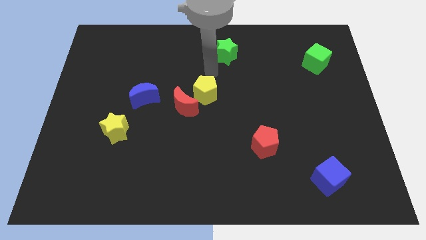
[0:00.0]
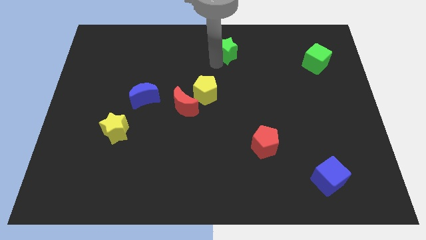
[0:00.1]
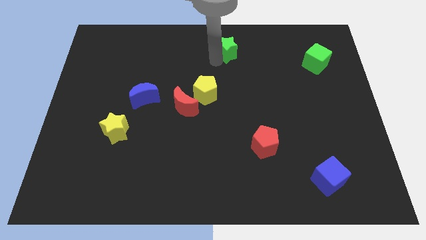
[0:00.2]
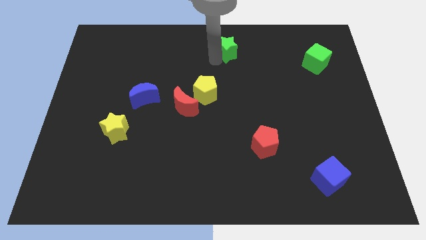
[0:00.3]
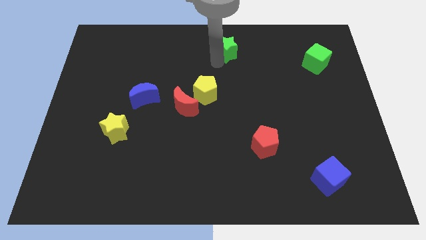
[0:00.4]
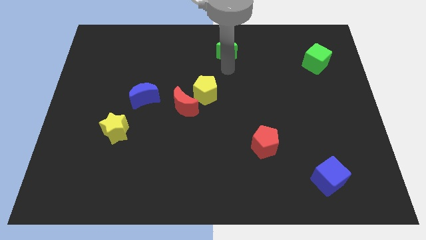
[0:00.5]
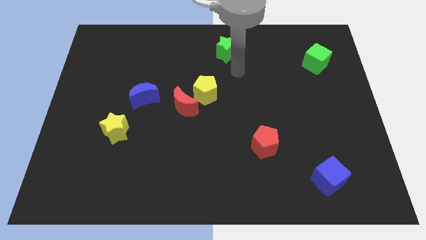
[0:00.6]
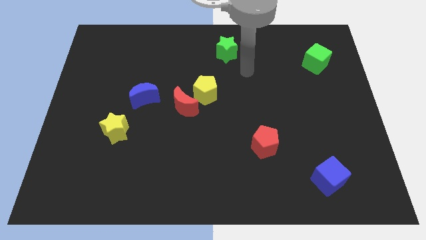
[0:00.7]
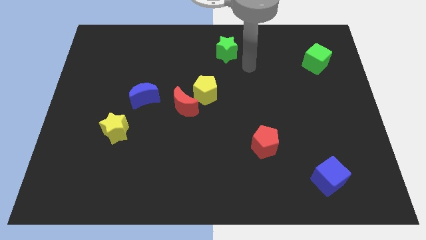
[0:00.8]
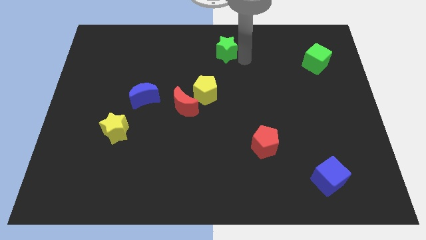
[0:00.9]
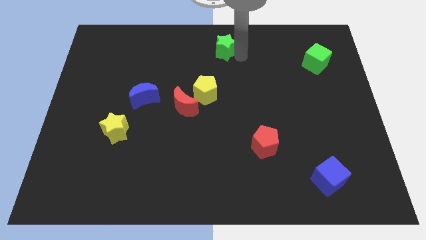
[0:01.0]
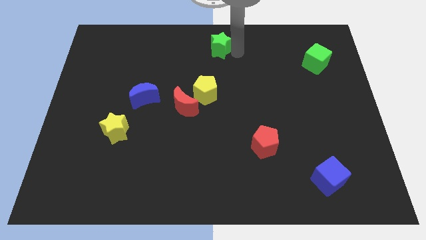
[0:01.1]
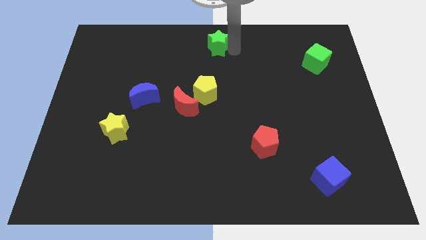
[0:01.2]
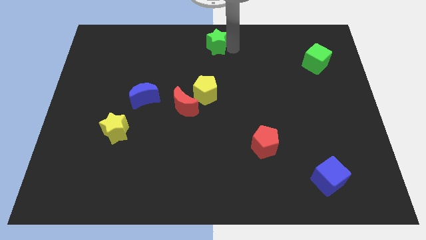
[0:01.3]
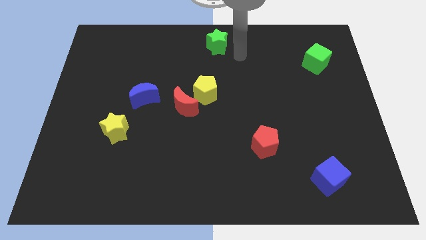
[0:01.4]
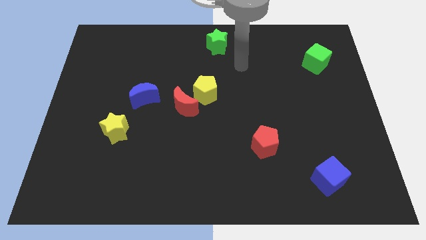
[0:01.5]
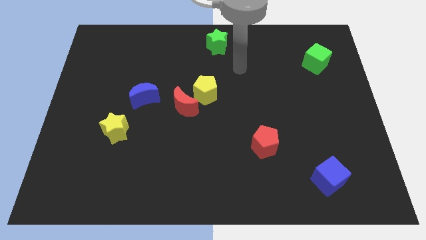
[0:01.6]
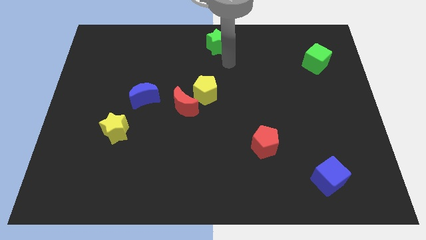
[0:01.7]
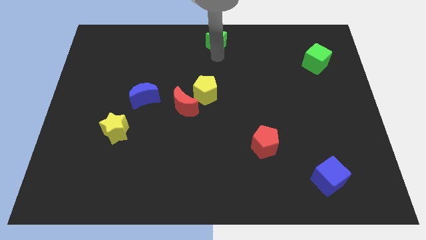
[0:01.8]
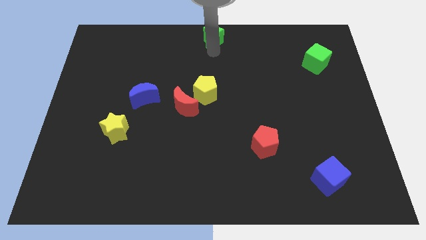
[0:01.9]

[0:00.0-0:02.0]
put the green star at the top center of the board

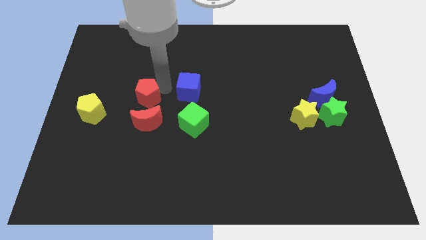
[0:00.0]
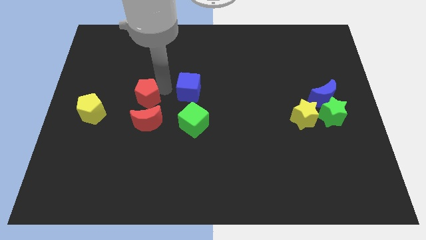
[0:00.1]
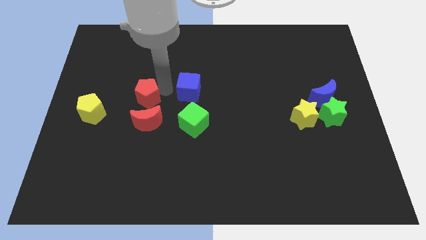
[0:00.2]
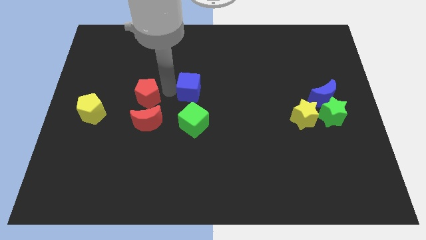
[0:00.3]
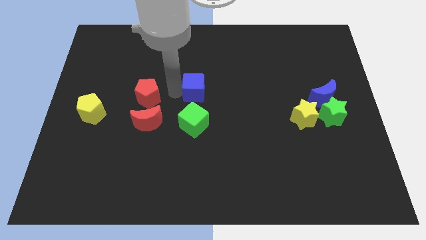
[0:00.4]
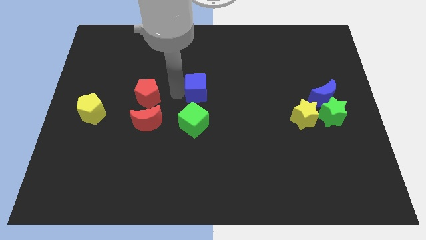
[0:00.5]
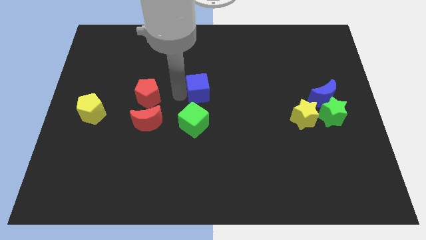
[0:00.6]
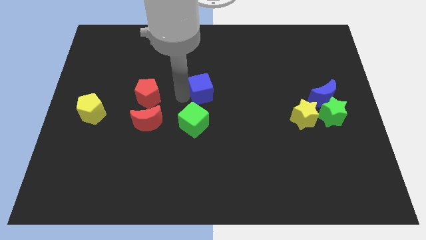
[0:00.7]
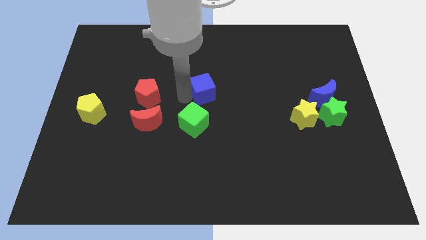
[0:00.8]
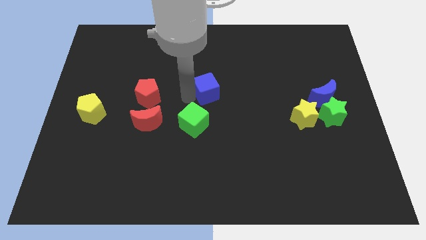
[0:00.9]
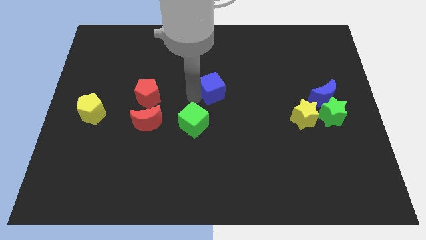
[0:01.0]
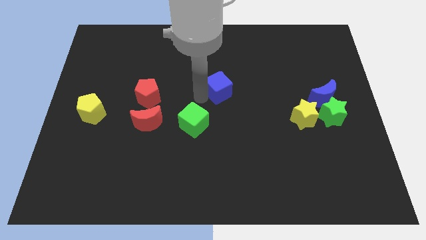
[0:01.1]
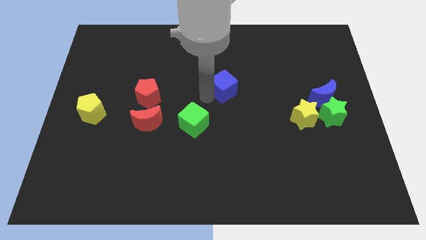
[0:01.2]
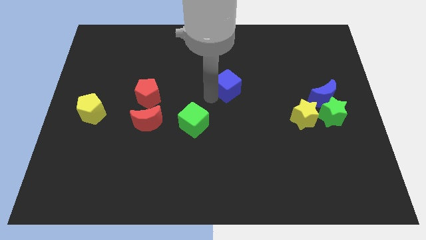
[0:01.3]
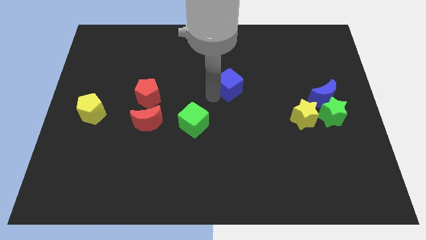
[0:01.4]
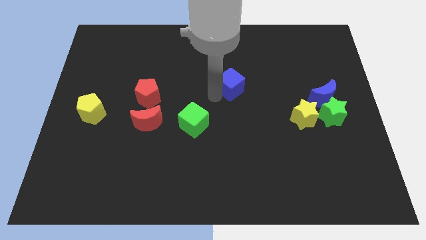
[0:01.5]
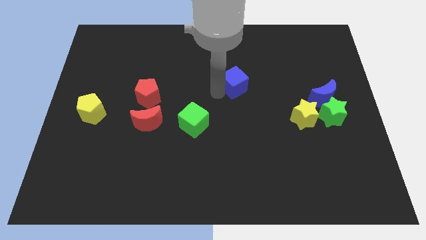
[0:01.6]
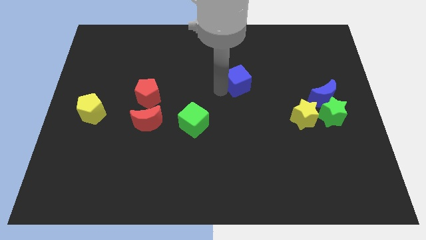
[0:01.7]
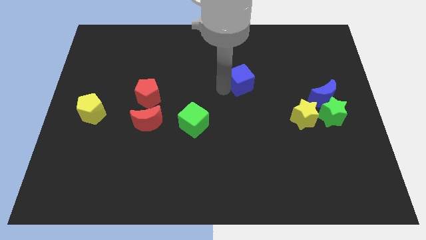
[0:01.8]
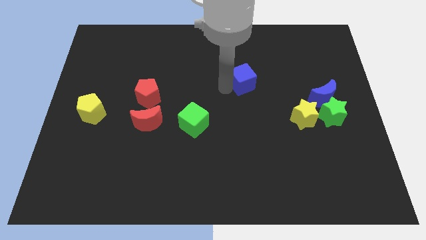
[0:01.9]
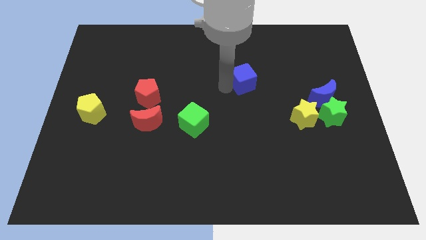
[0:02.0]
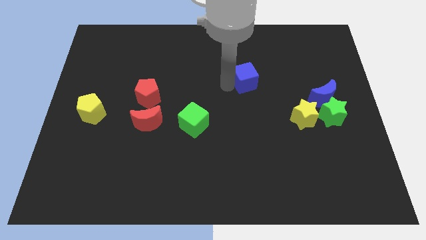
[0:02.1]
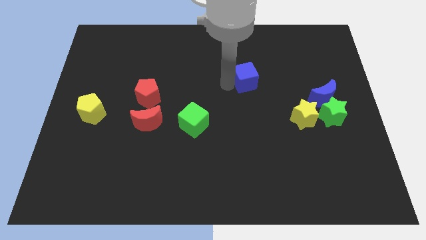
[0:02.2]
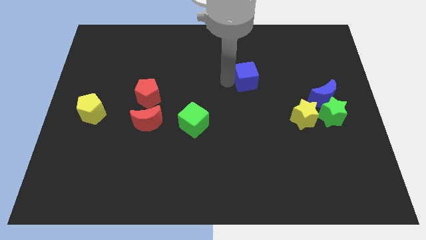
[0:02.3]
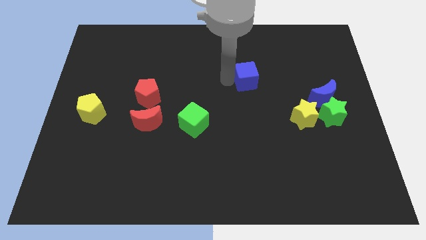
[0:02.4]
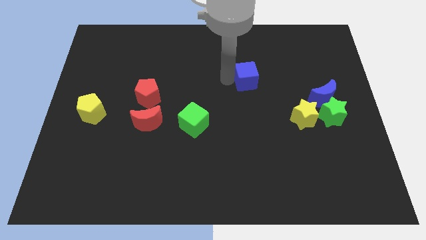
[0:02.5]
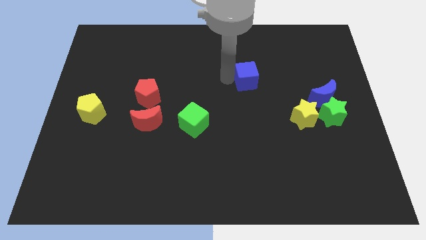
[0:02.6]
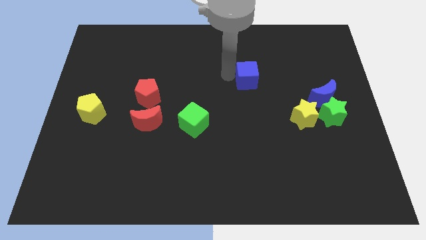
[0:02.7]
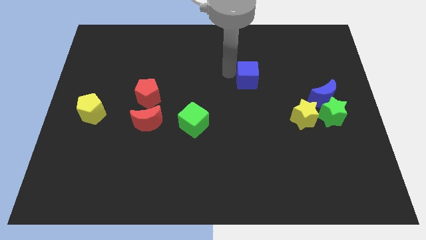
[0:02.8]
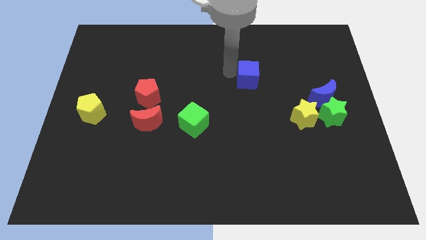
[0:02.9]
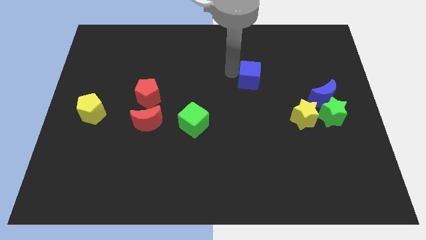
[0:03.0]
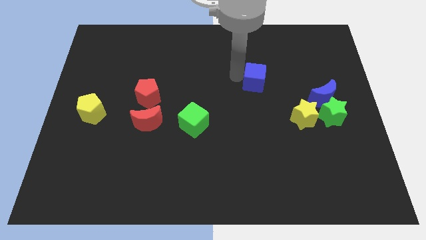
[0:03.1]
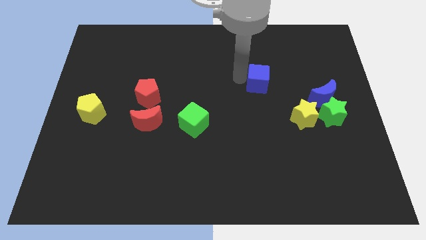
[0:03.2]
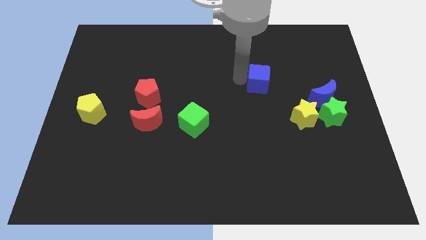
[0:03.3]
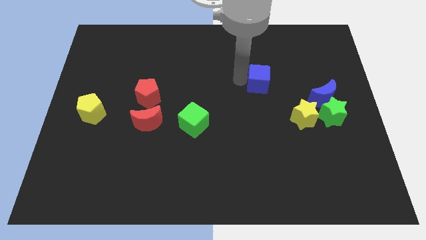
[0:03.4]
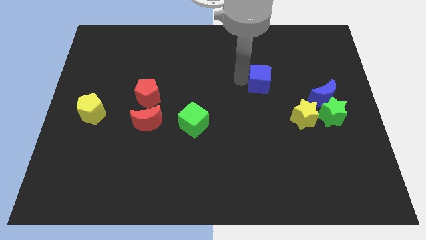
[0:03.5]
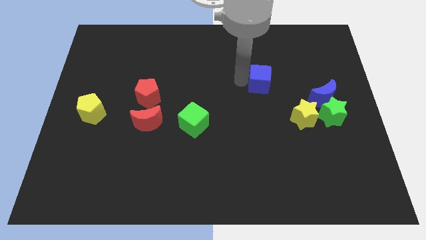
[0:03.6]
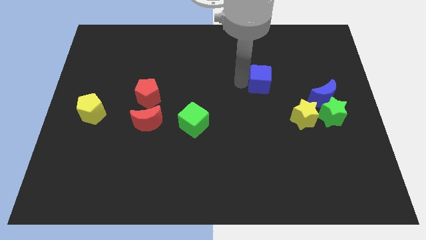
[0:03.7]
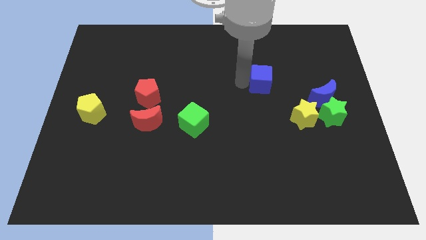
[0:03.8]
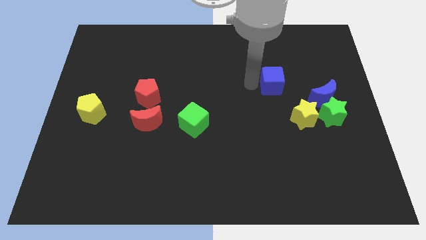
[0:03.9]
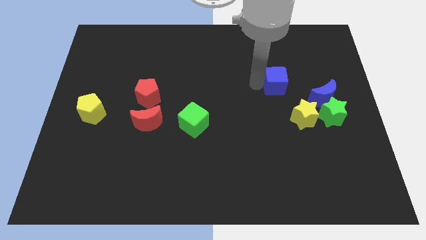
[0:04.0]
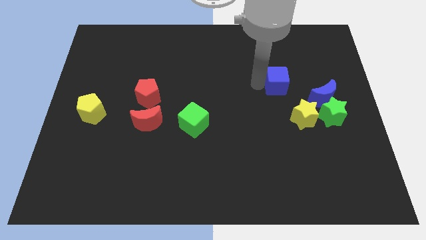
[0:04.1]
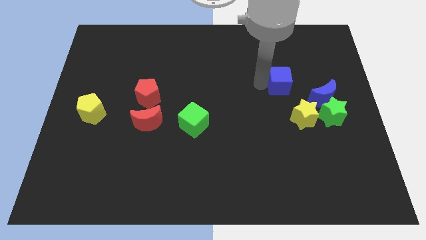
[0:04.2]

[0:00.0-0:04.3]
move the blue cube away from the top side of the green cube

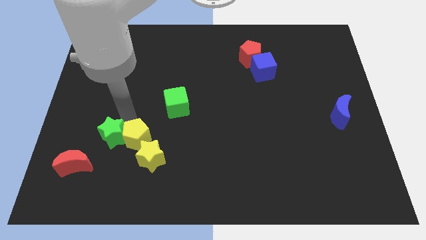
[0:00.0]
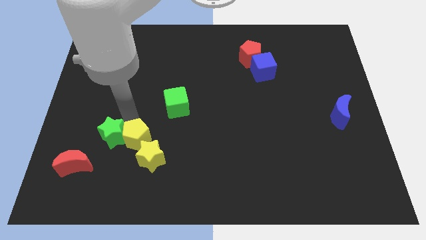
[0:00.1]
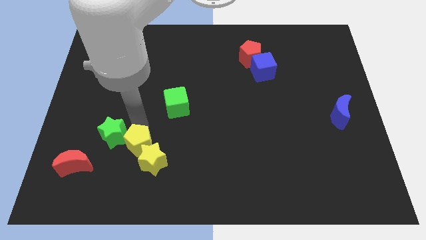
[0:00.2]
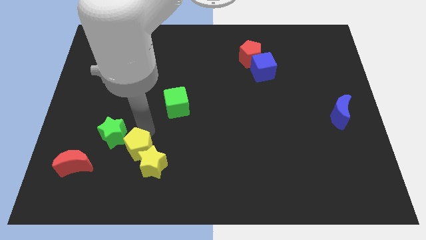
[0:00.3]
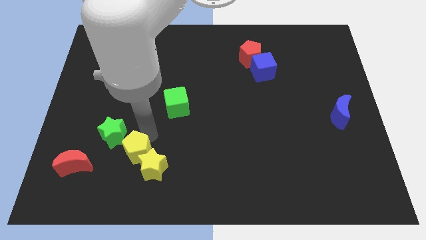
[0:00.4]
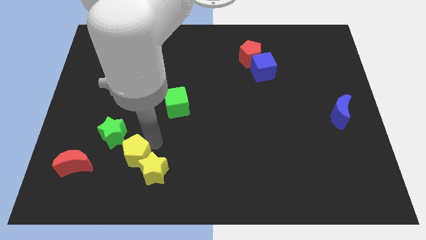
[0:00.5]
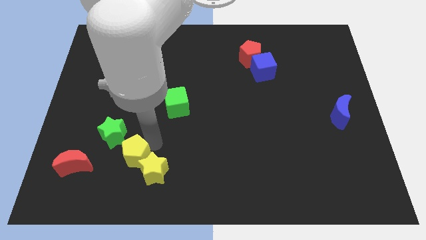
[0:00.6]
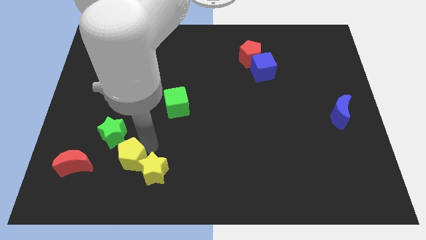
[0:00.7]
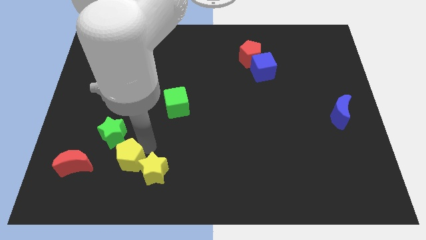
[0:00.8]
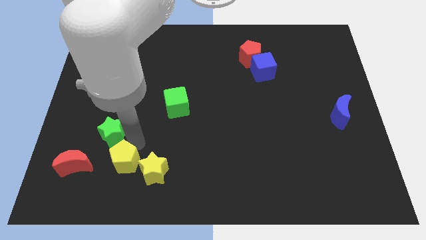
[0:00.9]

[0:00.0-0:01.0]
move the yellow pentagon right to the red moon

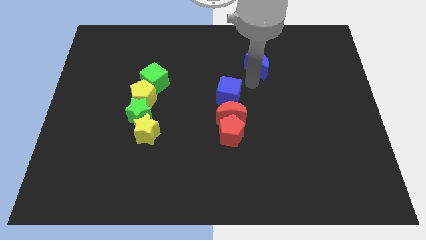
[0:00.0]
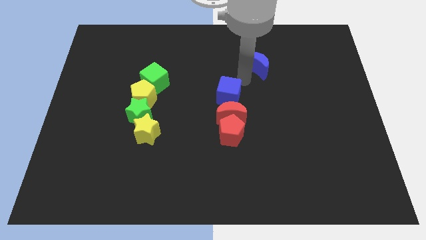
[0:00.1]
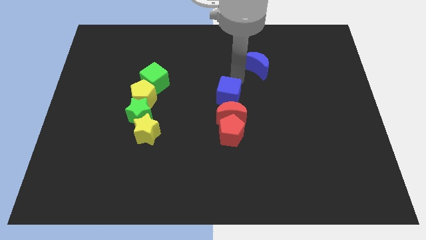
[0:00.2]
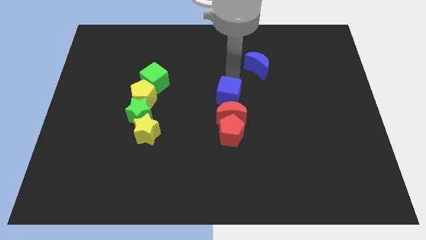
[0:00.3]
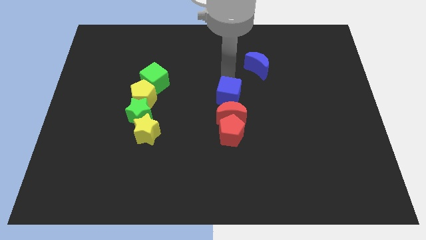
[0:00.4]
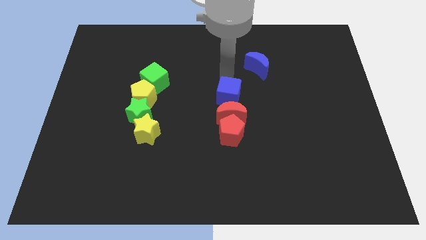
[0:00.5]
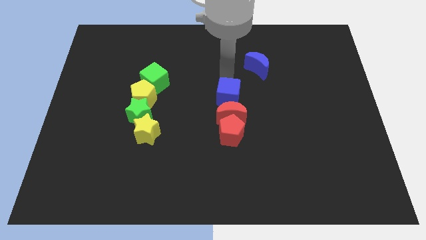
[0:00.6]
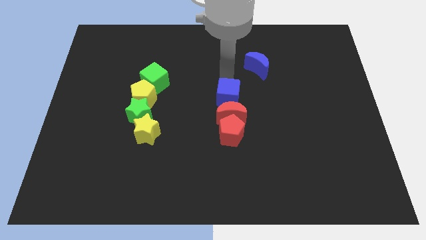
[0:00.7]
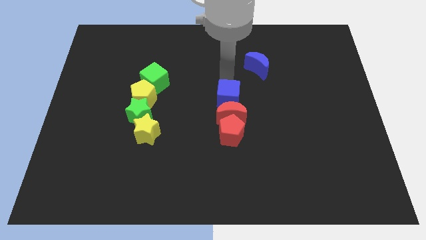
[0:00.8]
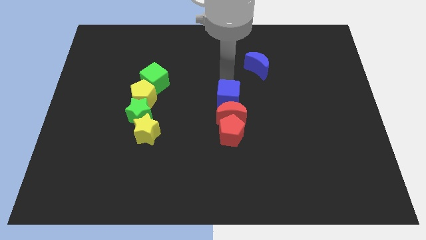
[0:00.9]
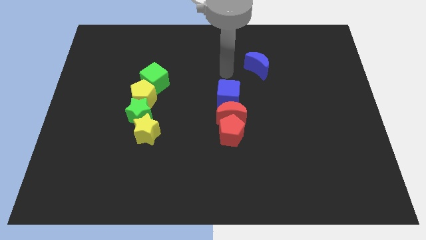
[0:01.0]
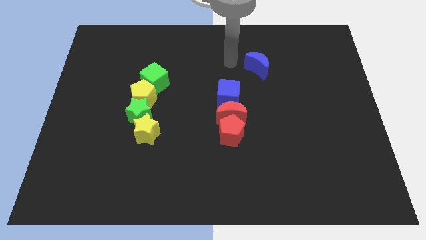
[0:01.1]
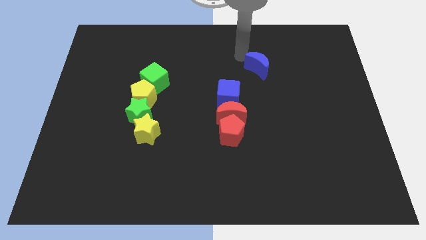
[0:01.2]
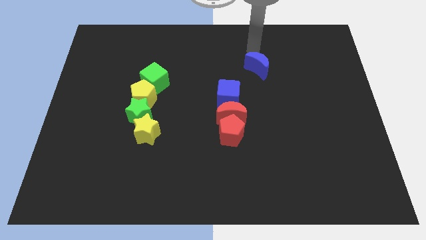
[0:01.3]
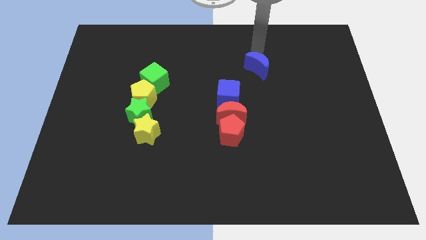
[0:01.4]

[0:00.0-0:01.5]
slide the blue cube slightly towards the red crescent

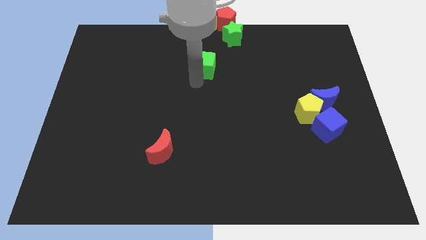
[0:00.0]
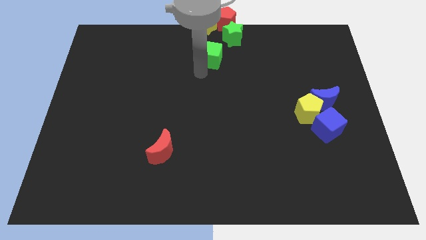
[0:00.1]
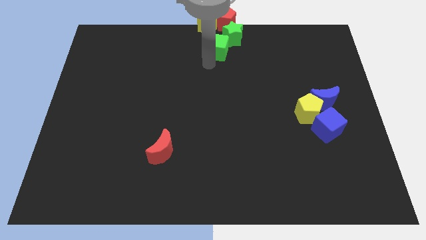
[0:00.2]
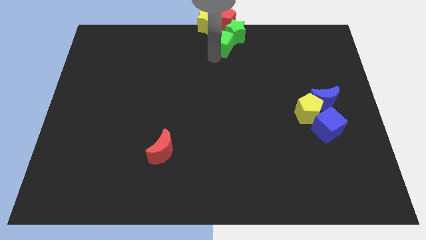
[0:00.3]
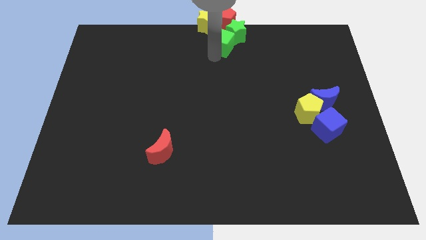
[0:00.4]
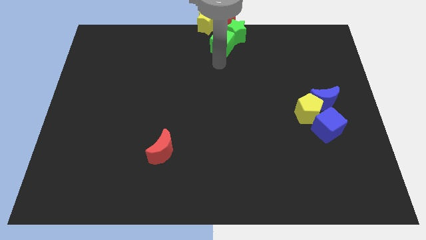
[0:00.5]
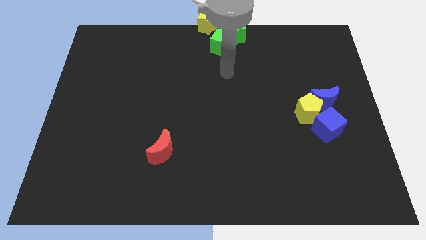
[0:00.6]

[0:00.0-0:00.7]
push the blue cube bottom left to the green star
